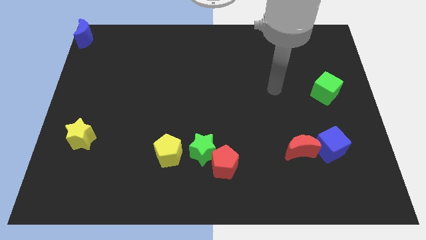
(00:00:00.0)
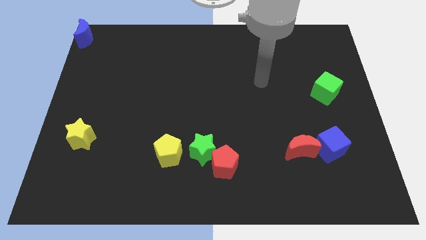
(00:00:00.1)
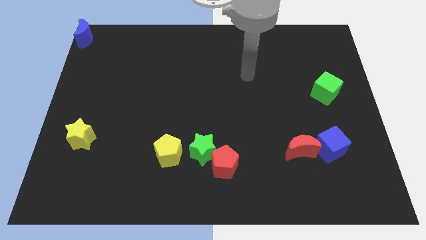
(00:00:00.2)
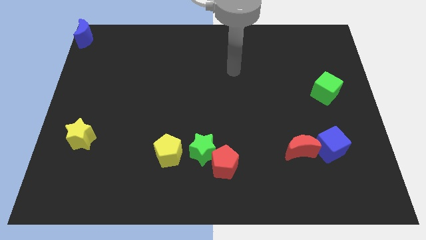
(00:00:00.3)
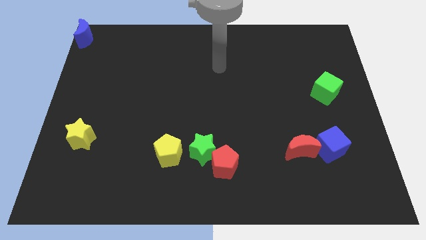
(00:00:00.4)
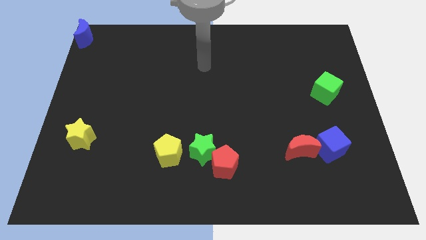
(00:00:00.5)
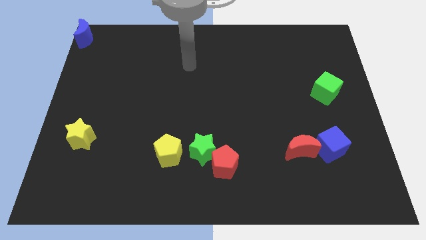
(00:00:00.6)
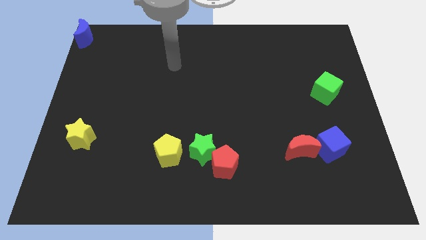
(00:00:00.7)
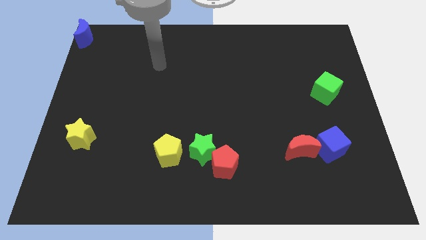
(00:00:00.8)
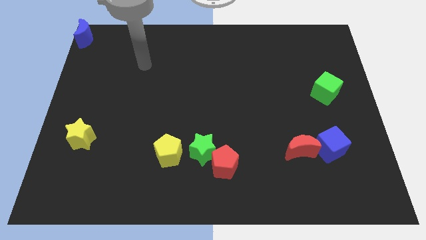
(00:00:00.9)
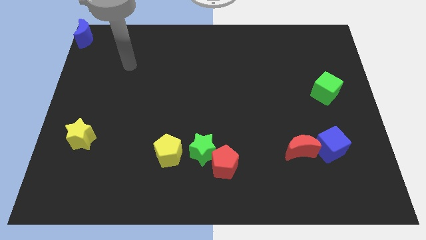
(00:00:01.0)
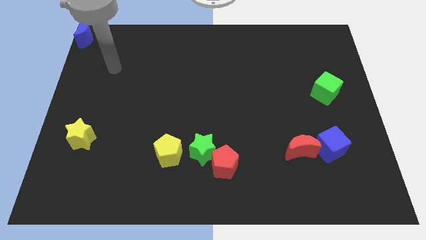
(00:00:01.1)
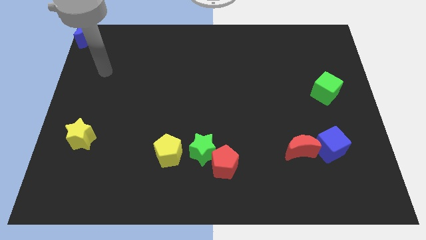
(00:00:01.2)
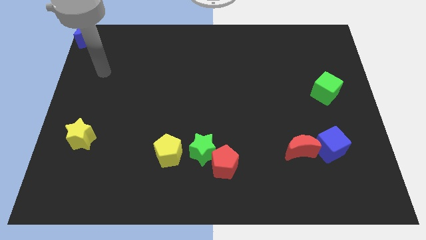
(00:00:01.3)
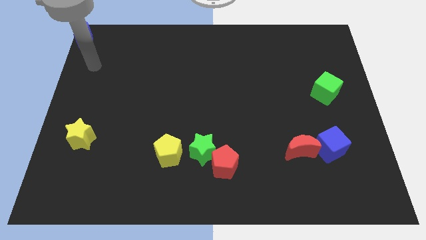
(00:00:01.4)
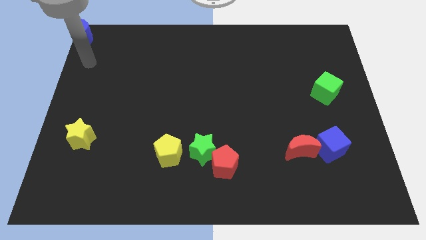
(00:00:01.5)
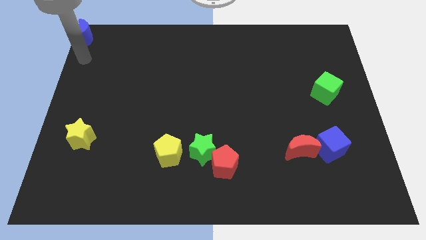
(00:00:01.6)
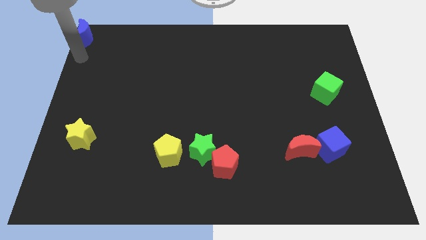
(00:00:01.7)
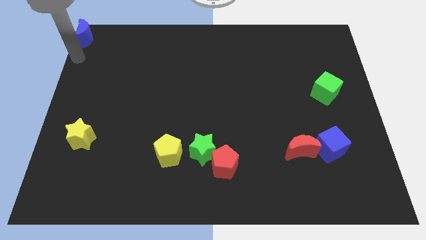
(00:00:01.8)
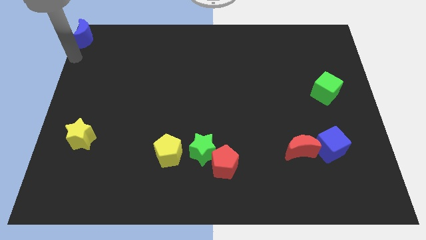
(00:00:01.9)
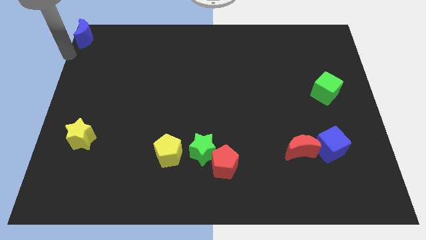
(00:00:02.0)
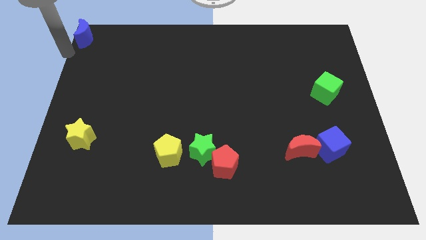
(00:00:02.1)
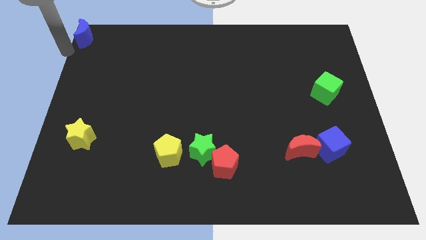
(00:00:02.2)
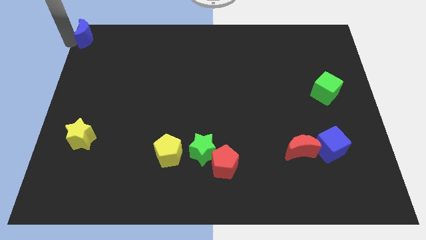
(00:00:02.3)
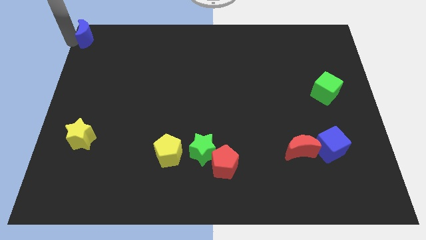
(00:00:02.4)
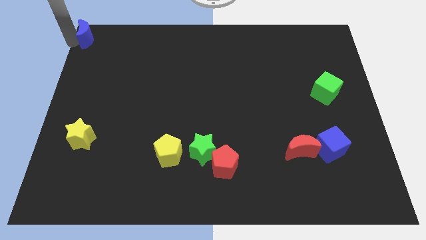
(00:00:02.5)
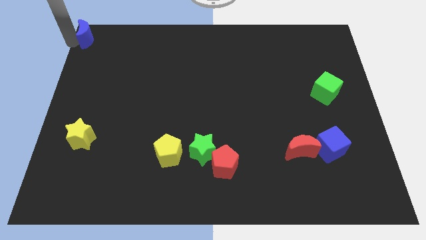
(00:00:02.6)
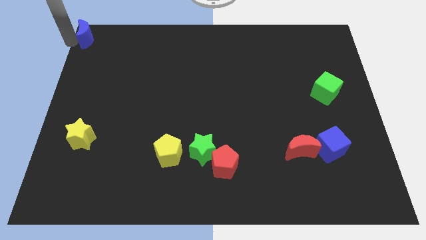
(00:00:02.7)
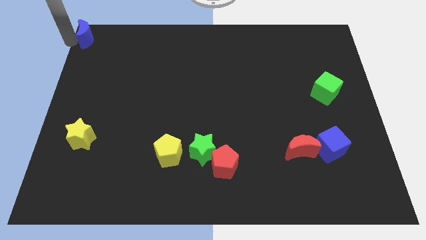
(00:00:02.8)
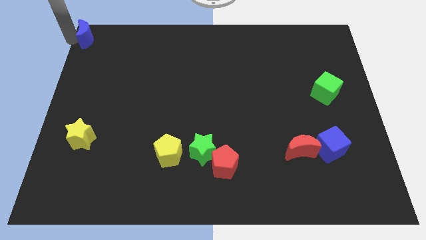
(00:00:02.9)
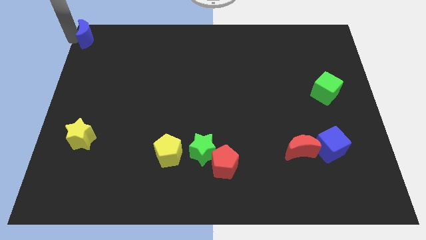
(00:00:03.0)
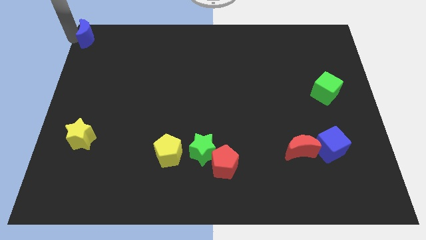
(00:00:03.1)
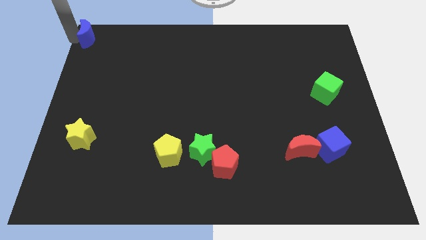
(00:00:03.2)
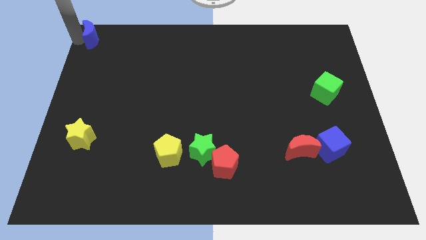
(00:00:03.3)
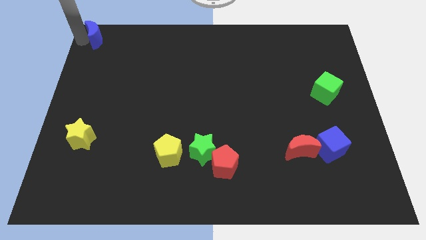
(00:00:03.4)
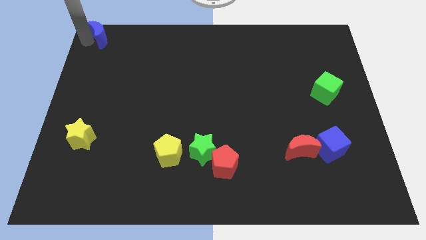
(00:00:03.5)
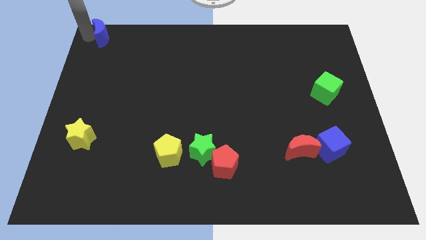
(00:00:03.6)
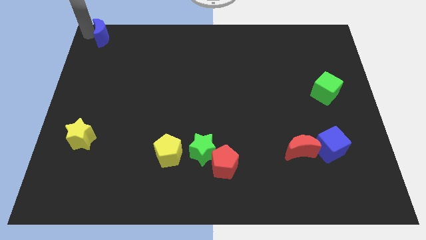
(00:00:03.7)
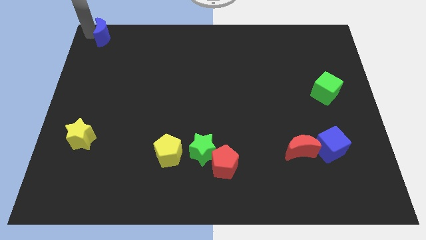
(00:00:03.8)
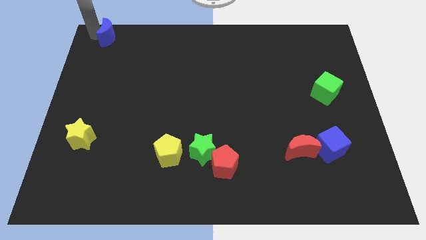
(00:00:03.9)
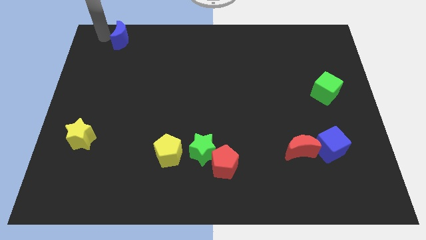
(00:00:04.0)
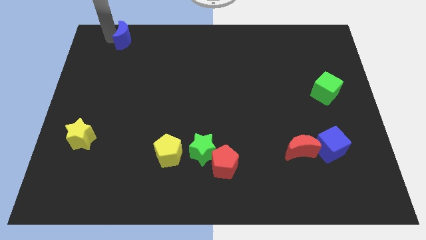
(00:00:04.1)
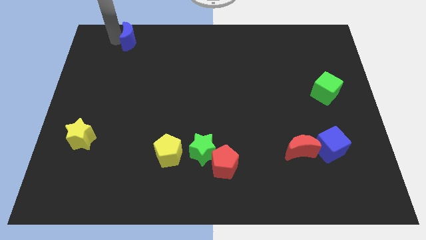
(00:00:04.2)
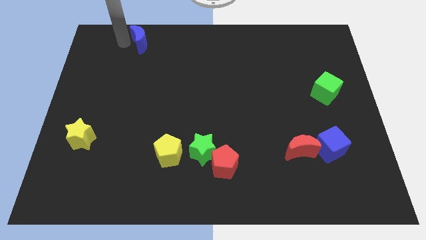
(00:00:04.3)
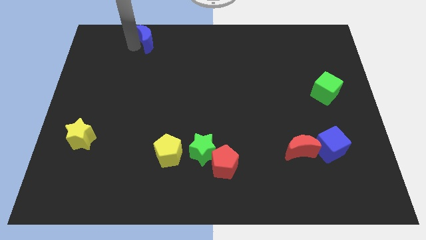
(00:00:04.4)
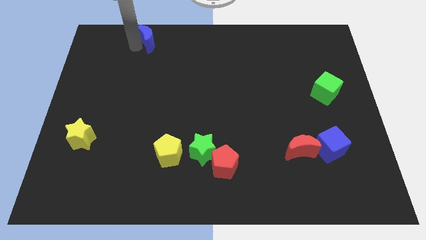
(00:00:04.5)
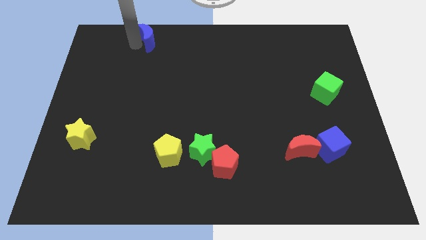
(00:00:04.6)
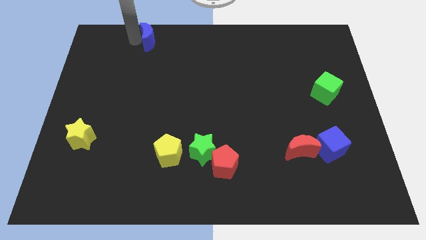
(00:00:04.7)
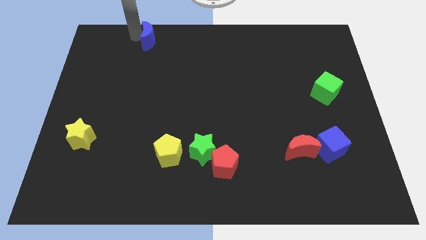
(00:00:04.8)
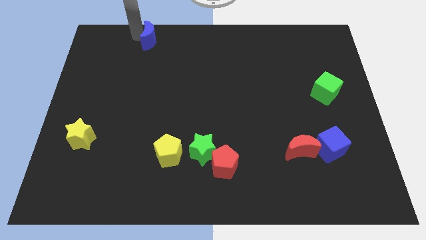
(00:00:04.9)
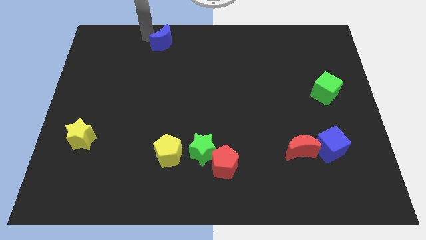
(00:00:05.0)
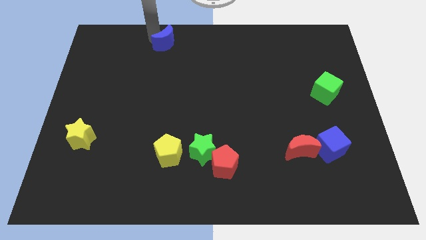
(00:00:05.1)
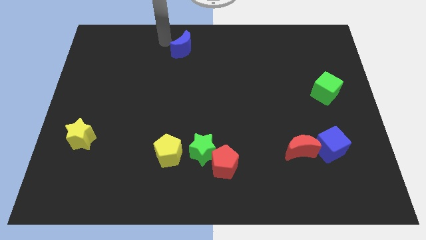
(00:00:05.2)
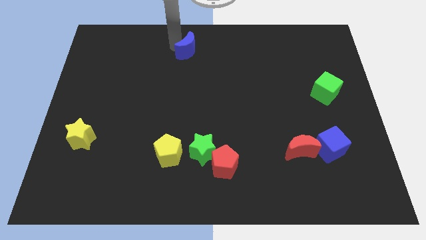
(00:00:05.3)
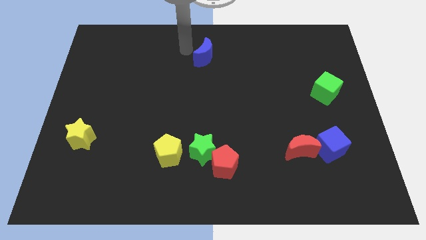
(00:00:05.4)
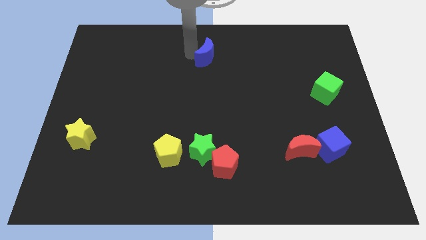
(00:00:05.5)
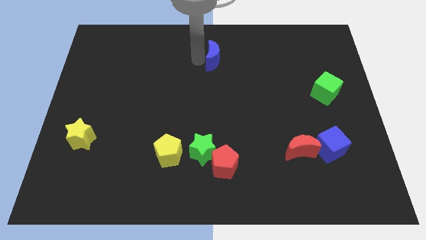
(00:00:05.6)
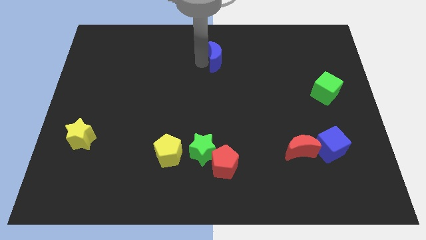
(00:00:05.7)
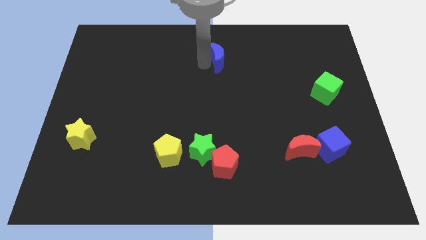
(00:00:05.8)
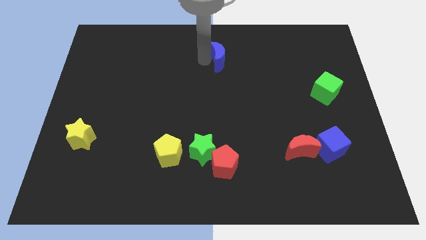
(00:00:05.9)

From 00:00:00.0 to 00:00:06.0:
move the blue moon towards the top center of the board

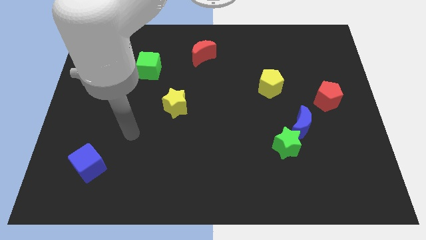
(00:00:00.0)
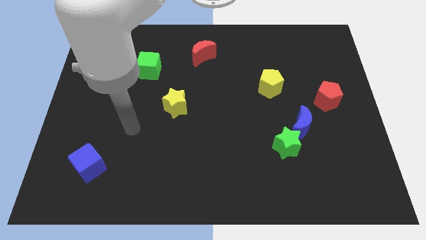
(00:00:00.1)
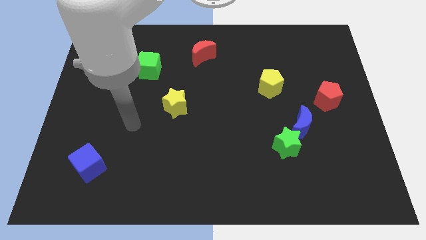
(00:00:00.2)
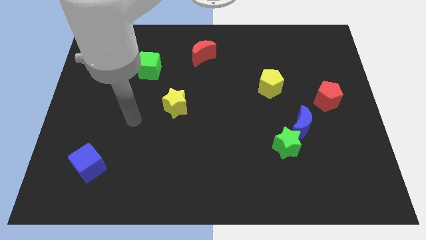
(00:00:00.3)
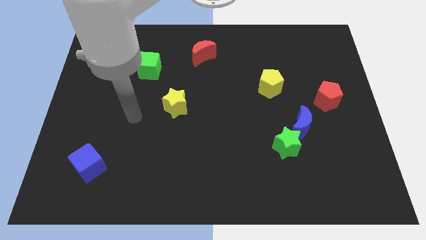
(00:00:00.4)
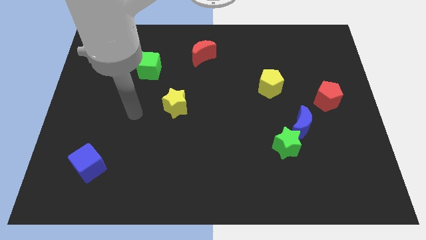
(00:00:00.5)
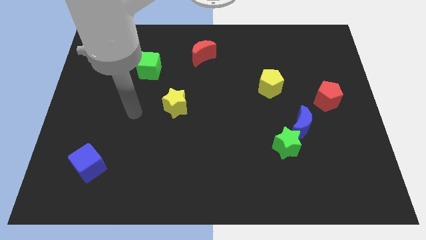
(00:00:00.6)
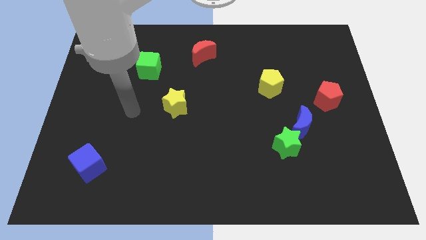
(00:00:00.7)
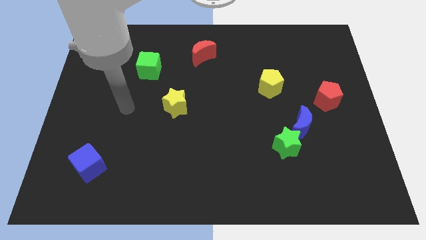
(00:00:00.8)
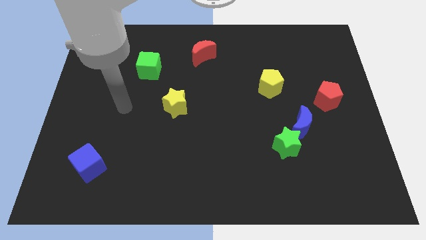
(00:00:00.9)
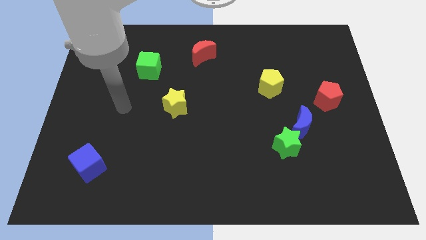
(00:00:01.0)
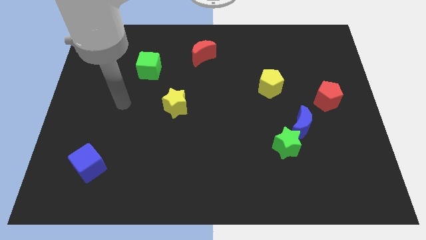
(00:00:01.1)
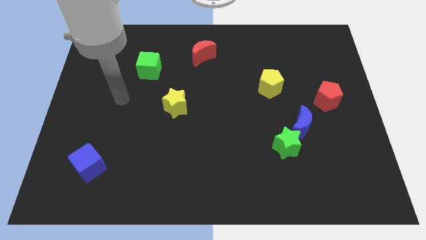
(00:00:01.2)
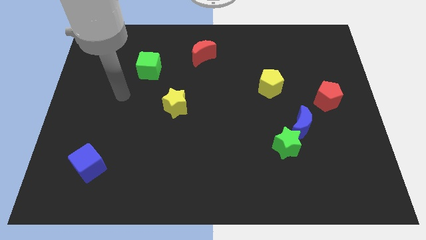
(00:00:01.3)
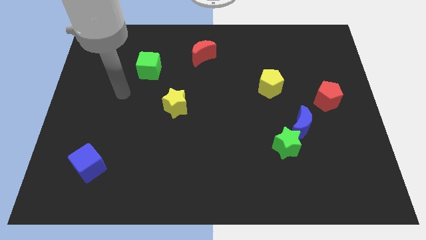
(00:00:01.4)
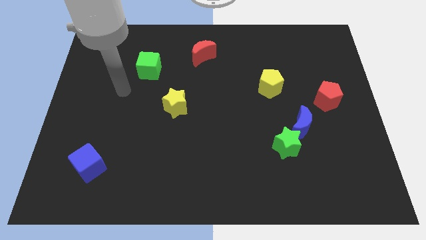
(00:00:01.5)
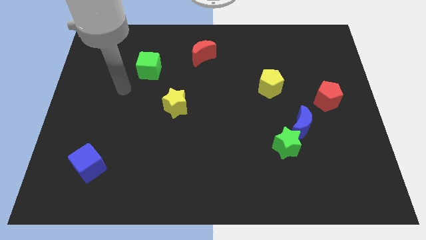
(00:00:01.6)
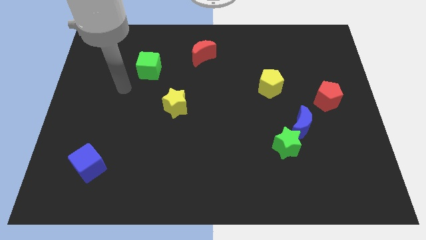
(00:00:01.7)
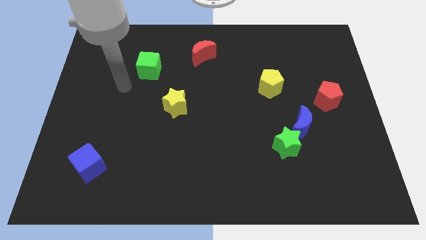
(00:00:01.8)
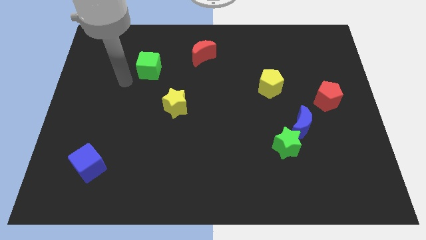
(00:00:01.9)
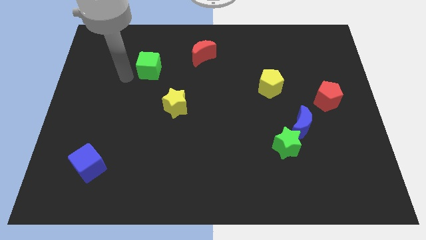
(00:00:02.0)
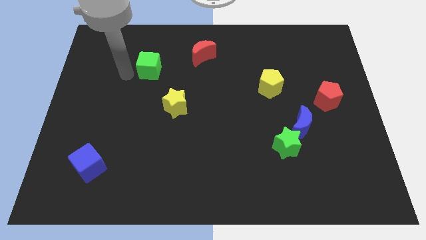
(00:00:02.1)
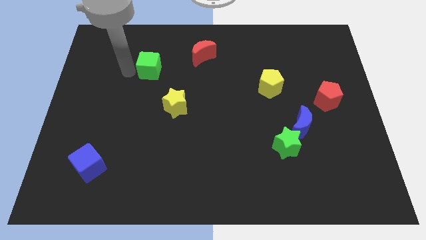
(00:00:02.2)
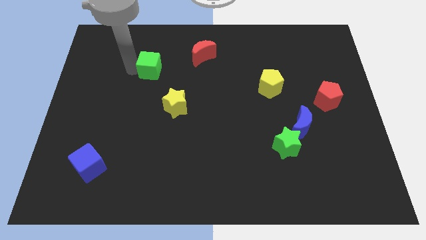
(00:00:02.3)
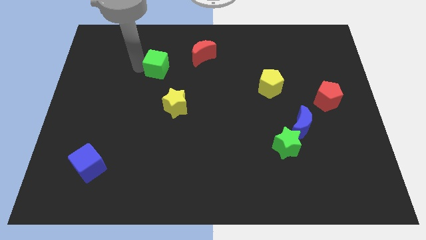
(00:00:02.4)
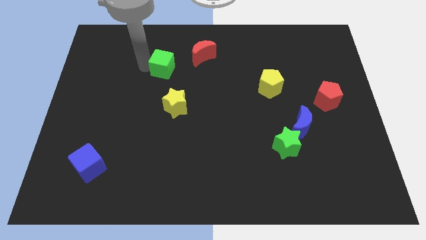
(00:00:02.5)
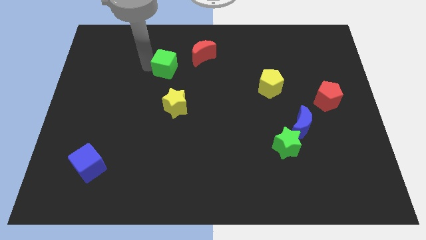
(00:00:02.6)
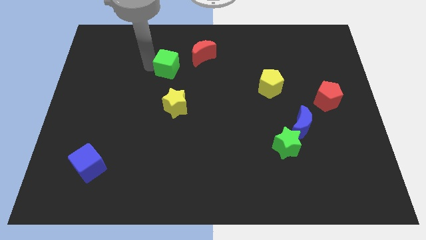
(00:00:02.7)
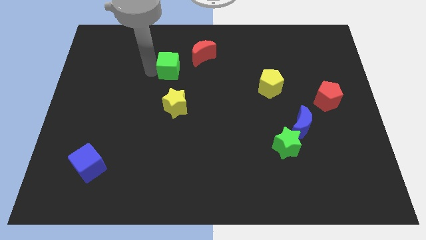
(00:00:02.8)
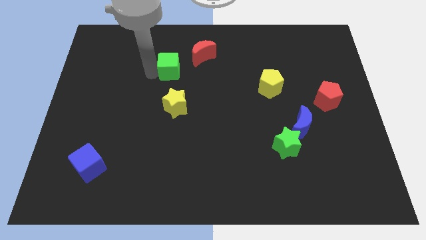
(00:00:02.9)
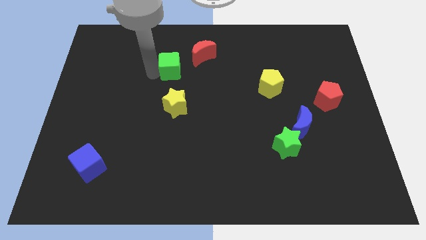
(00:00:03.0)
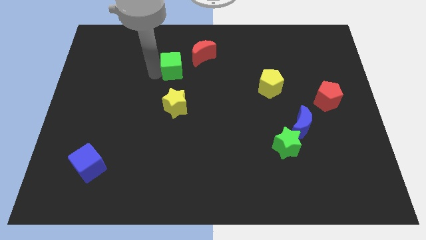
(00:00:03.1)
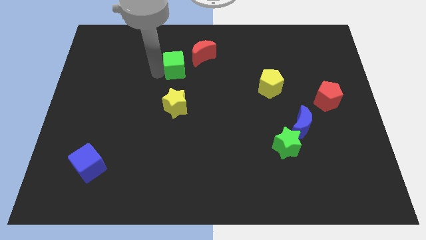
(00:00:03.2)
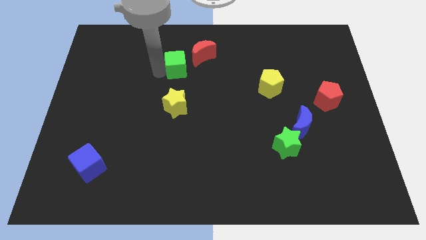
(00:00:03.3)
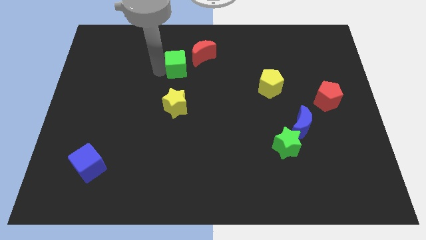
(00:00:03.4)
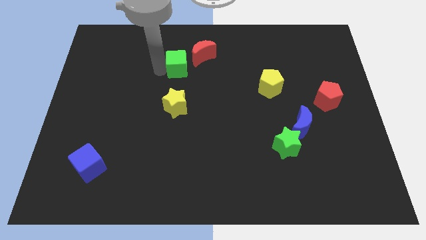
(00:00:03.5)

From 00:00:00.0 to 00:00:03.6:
push the green cube towards the right side of the board
